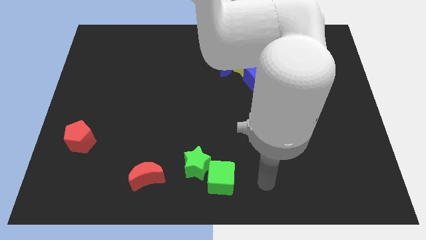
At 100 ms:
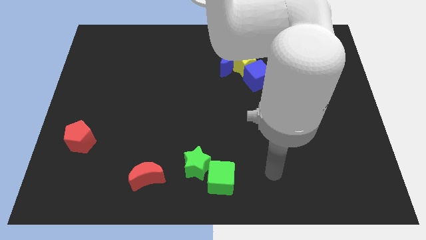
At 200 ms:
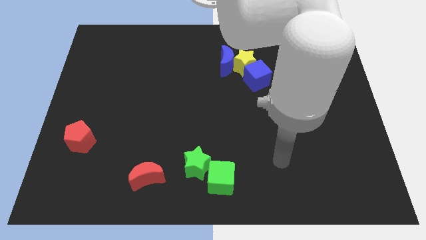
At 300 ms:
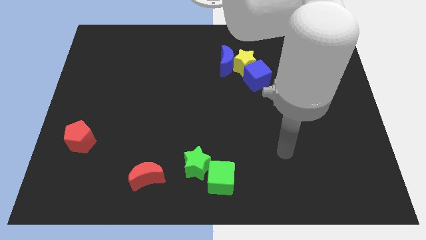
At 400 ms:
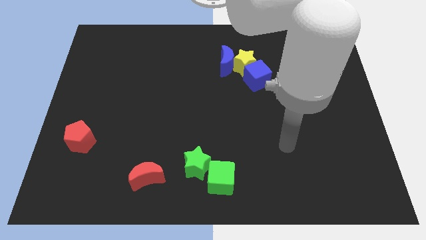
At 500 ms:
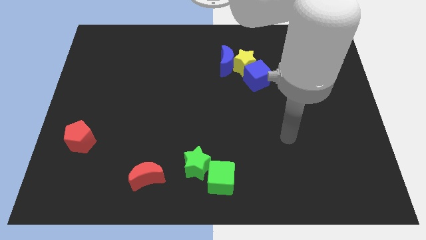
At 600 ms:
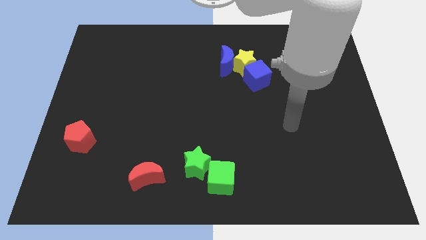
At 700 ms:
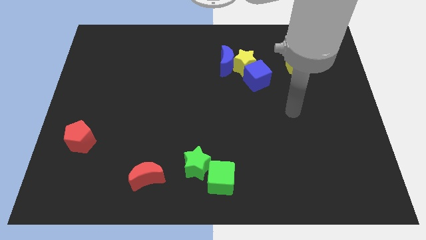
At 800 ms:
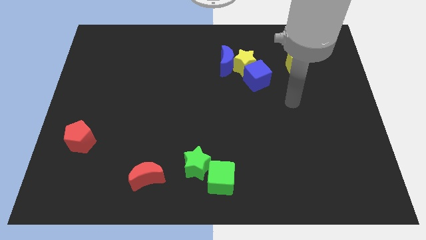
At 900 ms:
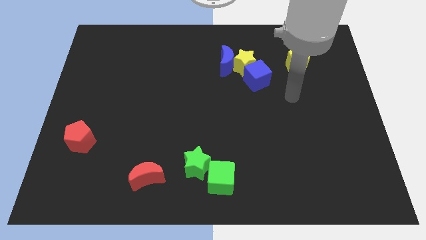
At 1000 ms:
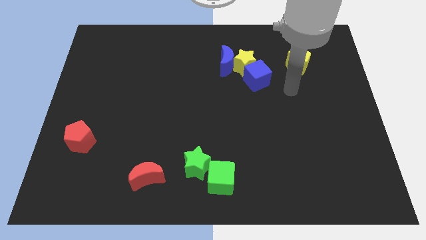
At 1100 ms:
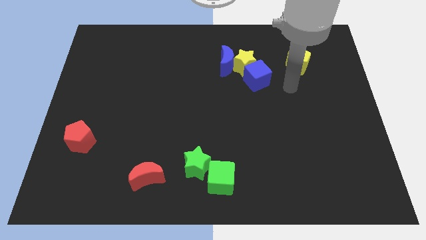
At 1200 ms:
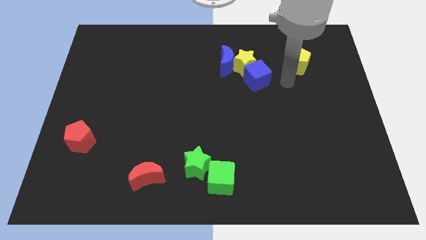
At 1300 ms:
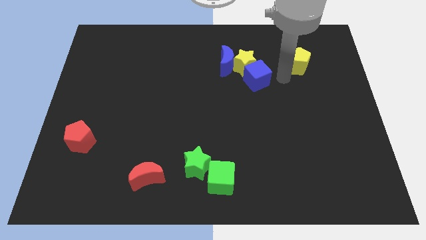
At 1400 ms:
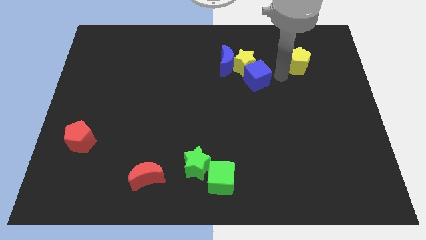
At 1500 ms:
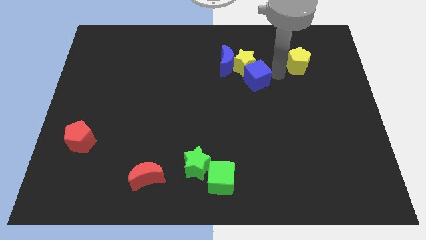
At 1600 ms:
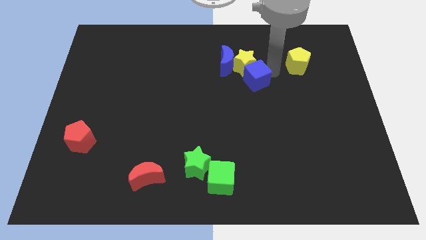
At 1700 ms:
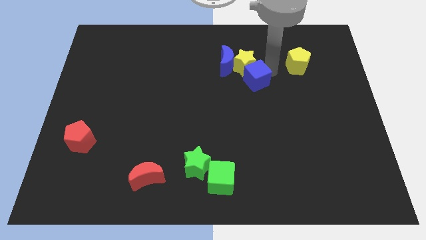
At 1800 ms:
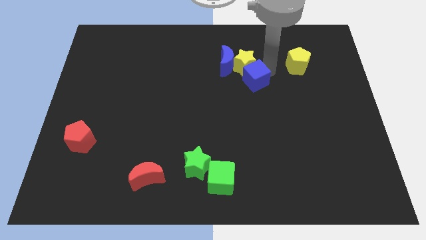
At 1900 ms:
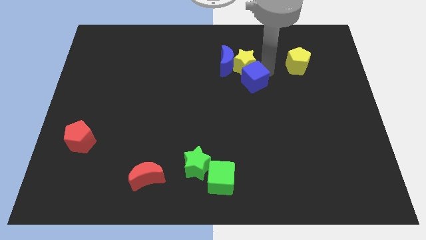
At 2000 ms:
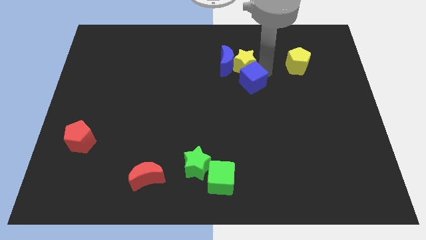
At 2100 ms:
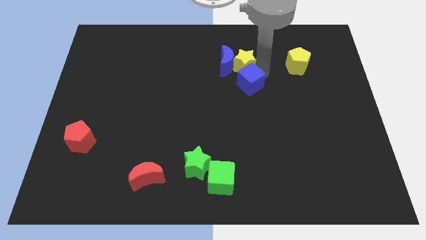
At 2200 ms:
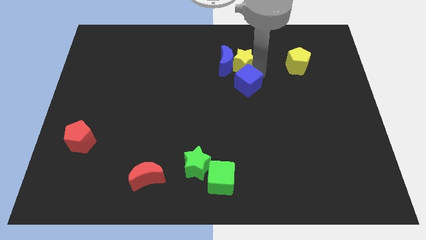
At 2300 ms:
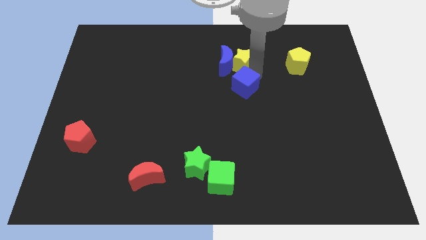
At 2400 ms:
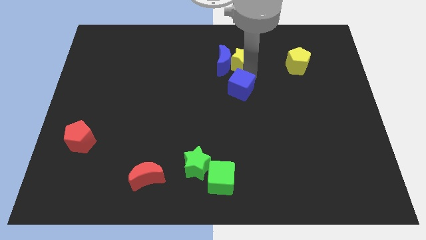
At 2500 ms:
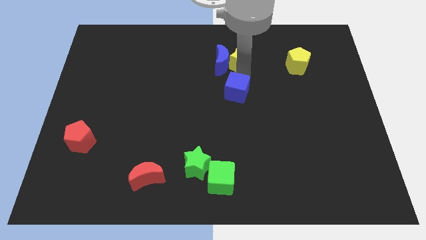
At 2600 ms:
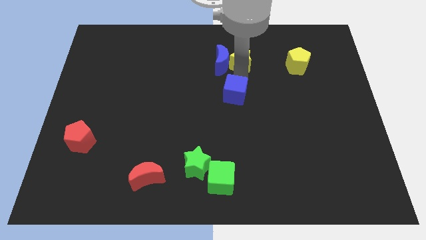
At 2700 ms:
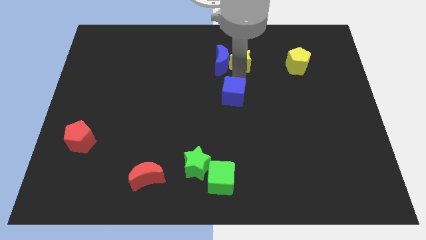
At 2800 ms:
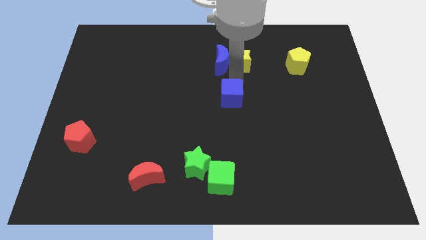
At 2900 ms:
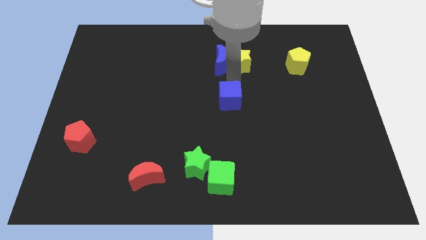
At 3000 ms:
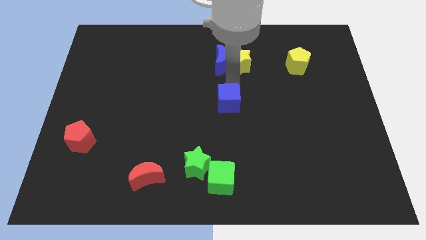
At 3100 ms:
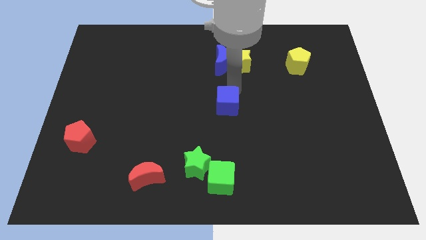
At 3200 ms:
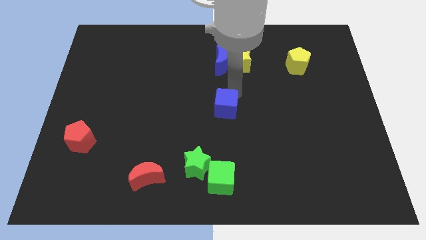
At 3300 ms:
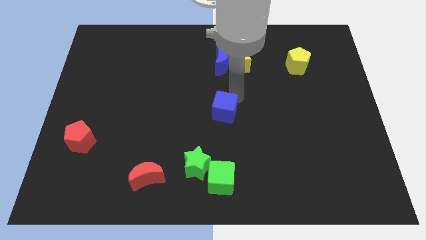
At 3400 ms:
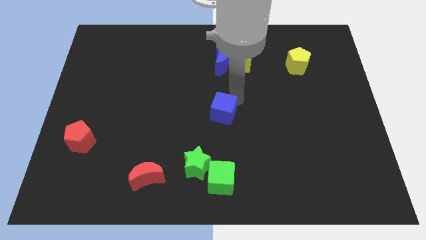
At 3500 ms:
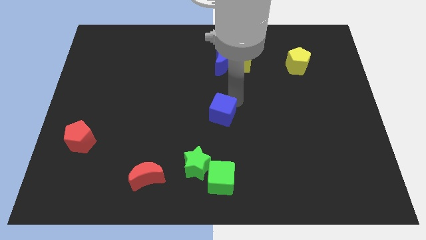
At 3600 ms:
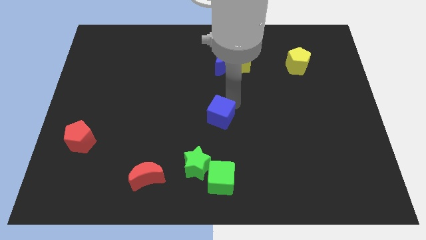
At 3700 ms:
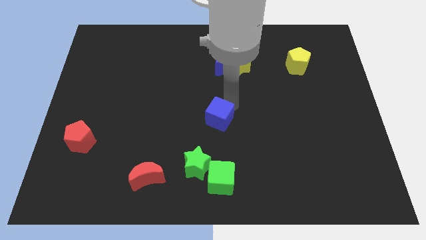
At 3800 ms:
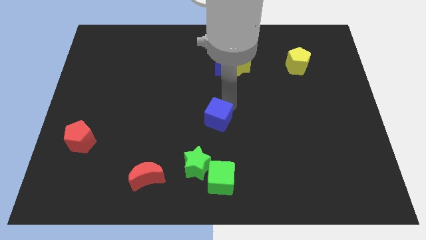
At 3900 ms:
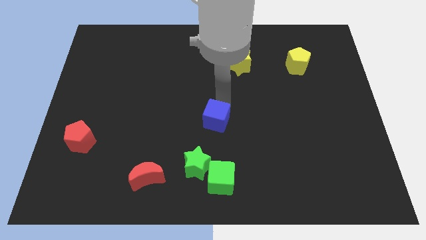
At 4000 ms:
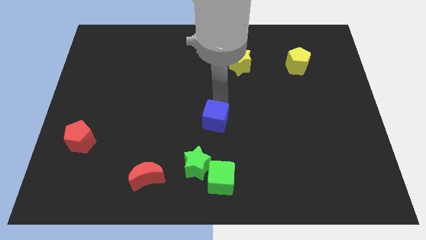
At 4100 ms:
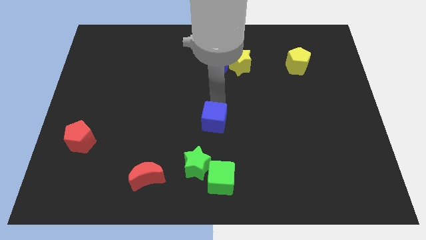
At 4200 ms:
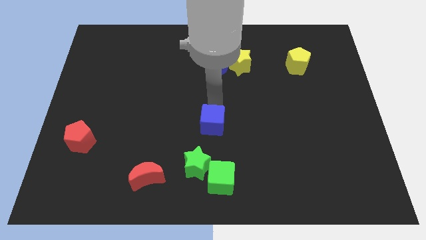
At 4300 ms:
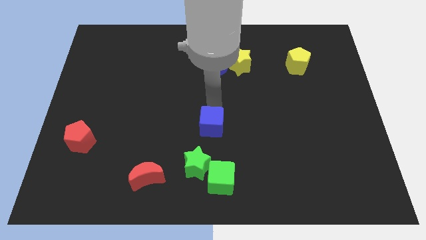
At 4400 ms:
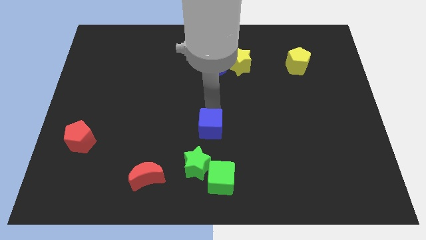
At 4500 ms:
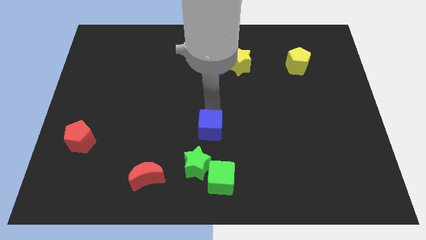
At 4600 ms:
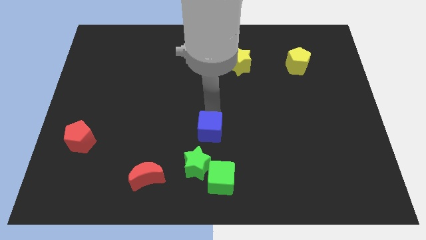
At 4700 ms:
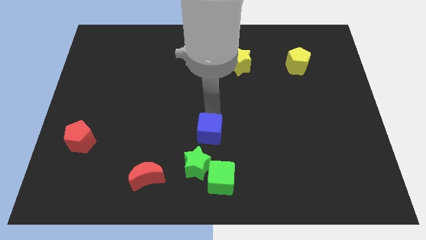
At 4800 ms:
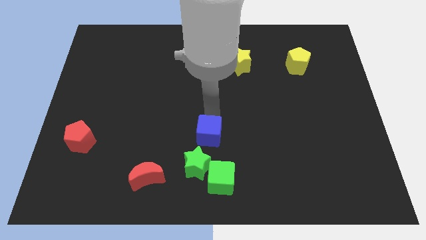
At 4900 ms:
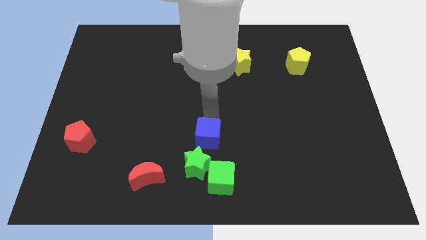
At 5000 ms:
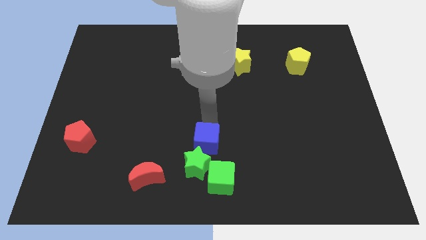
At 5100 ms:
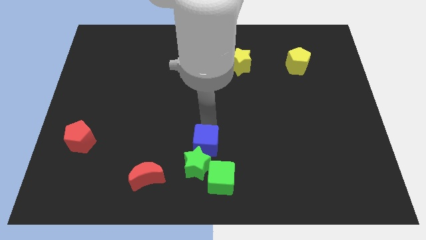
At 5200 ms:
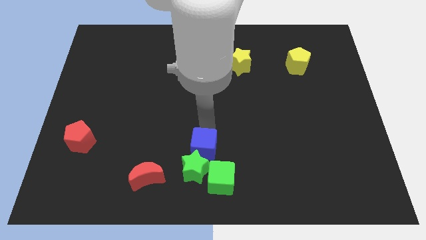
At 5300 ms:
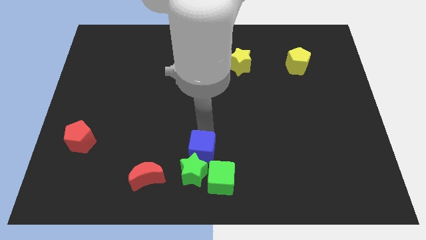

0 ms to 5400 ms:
put the blue cube next to the green star

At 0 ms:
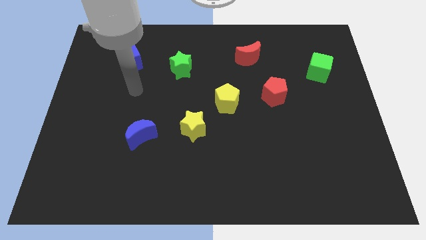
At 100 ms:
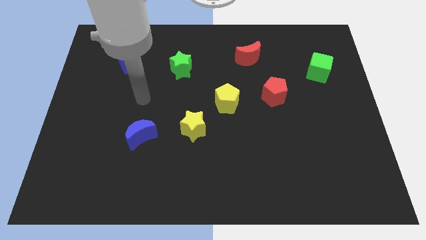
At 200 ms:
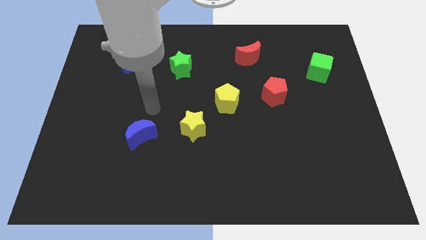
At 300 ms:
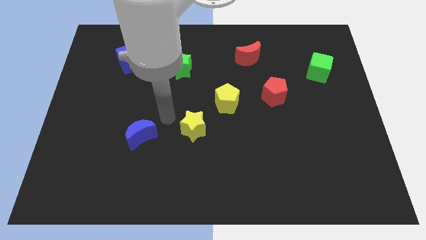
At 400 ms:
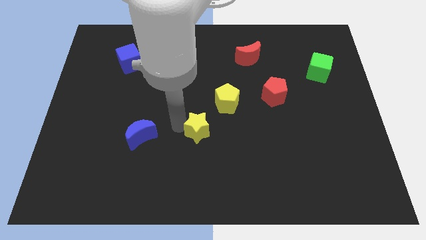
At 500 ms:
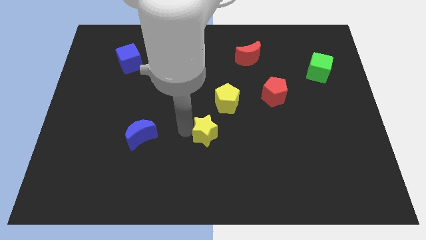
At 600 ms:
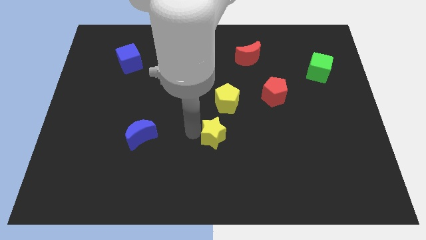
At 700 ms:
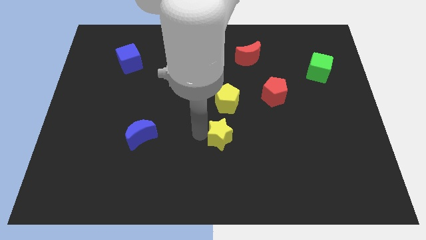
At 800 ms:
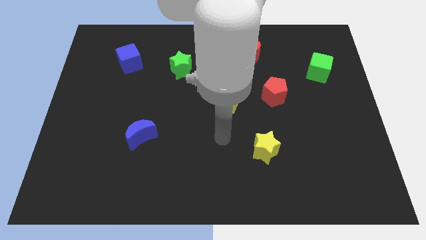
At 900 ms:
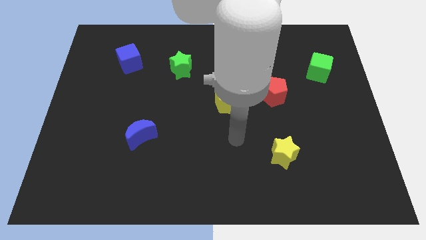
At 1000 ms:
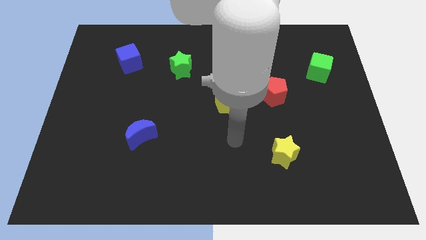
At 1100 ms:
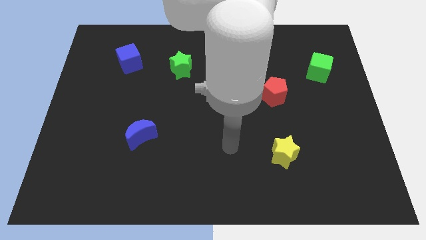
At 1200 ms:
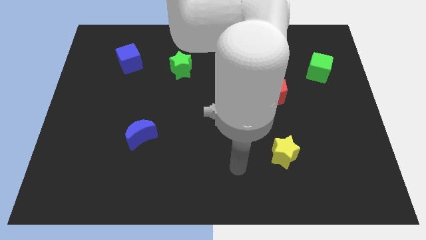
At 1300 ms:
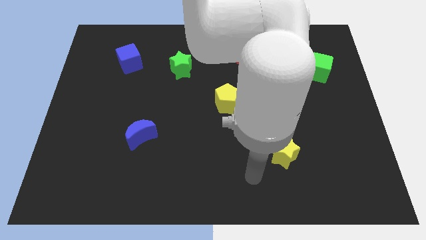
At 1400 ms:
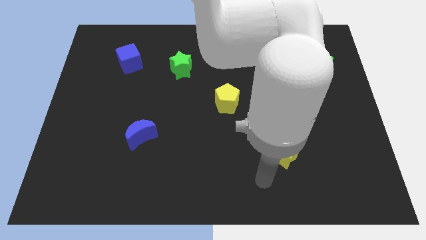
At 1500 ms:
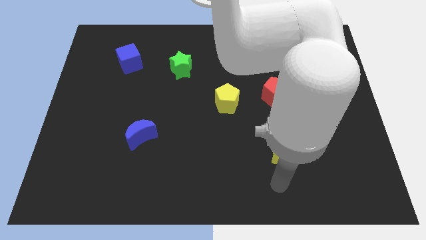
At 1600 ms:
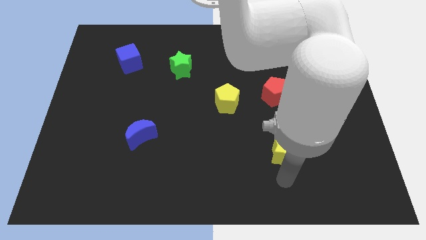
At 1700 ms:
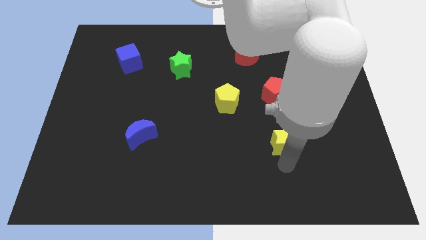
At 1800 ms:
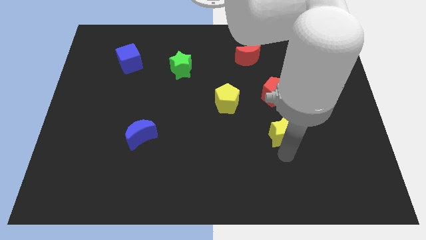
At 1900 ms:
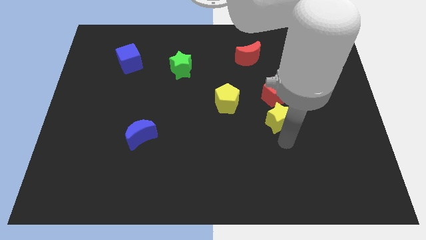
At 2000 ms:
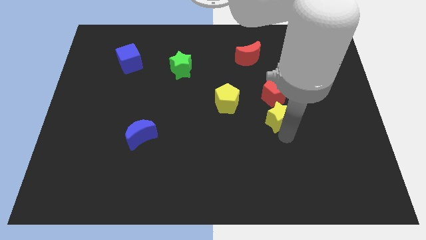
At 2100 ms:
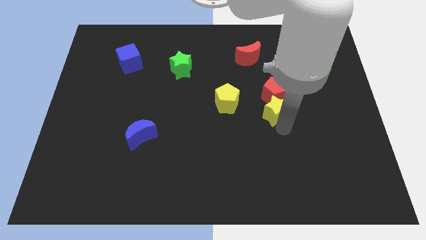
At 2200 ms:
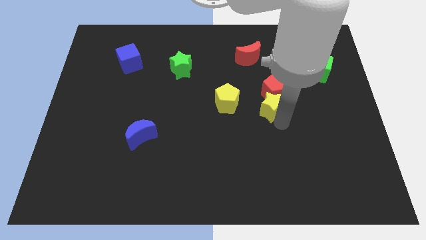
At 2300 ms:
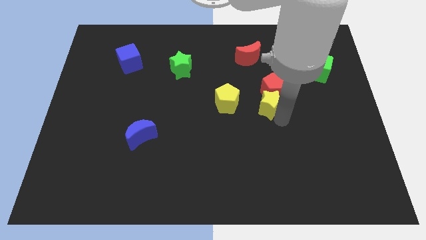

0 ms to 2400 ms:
put the yellow star towards the red pentagon

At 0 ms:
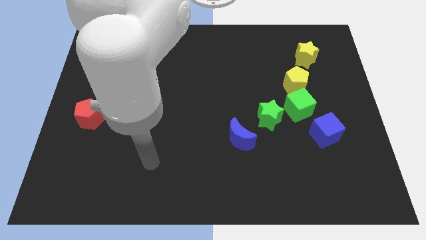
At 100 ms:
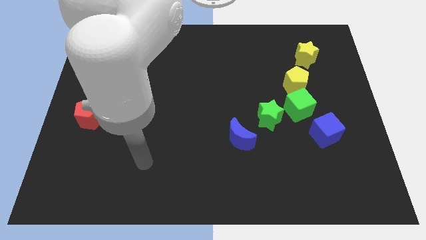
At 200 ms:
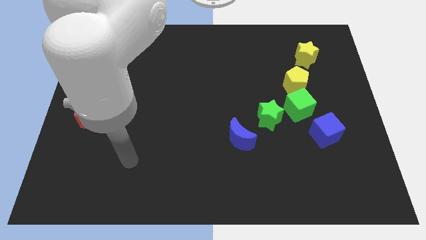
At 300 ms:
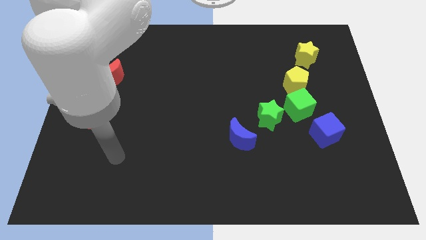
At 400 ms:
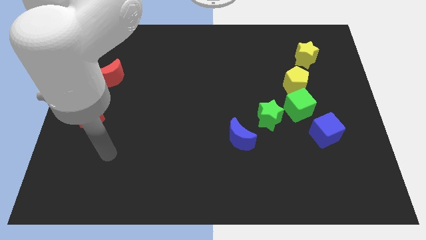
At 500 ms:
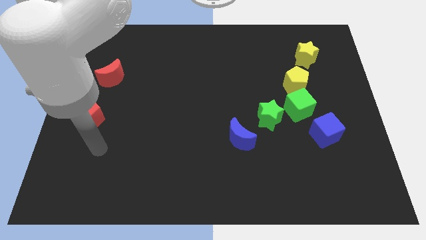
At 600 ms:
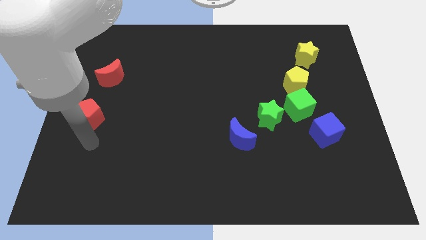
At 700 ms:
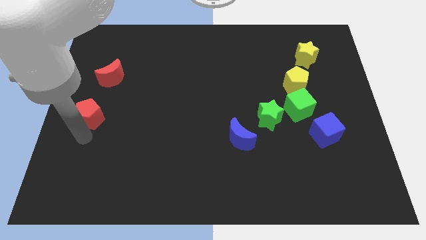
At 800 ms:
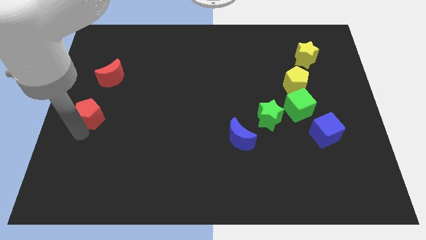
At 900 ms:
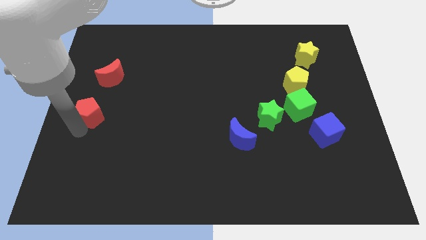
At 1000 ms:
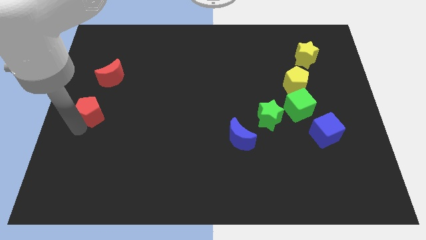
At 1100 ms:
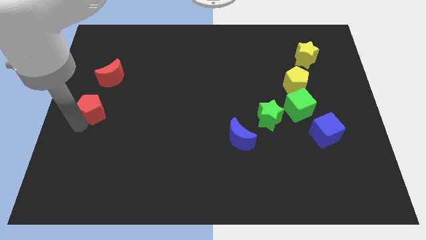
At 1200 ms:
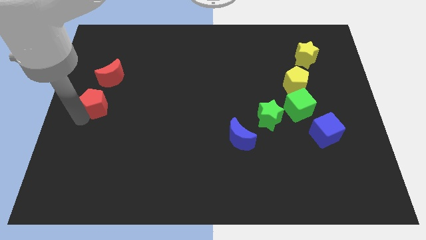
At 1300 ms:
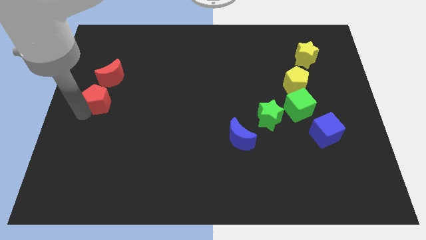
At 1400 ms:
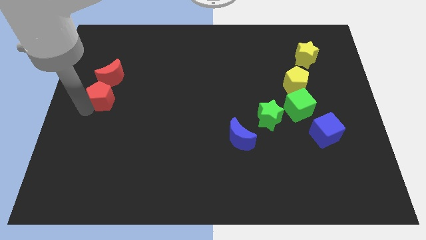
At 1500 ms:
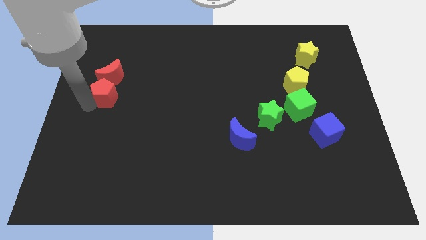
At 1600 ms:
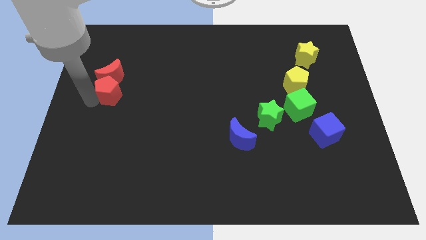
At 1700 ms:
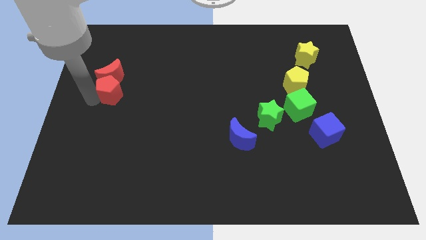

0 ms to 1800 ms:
slide the red pentagon towards the red moon
